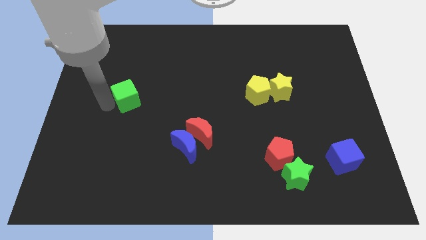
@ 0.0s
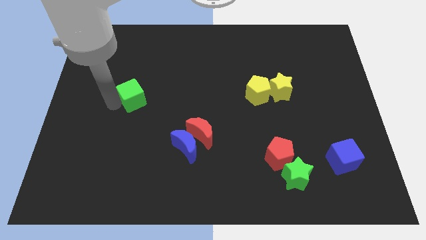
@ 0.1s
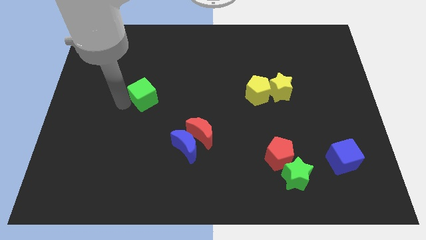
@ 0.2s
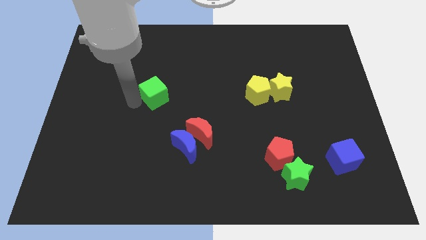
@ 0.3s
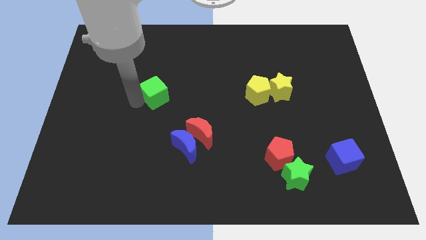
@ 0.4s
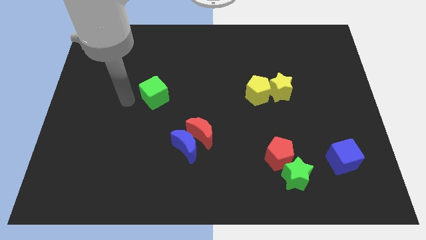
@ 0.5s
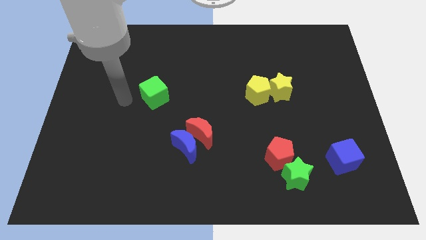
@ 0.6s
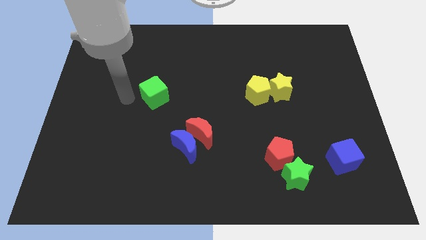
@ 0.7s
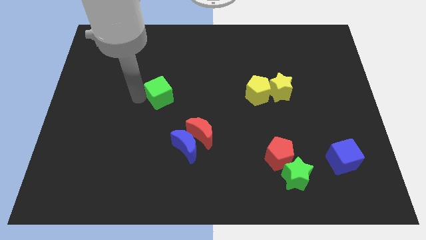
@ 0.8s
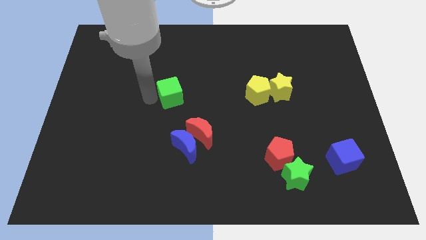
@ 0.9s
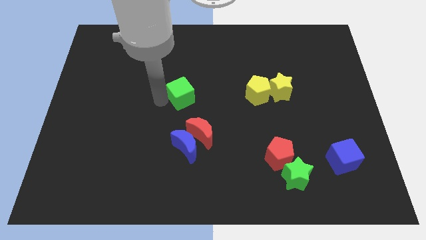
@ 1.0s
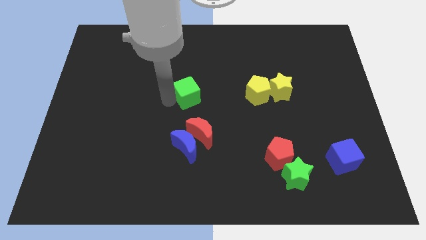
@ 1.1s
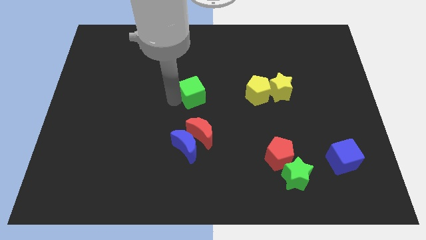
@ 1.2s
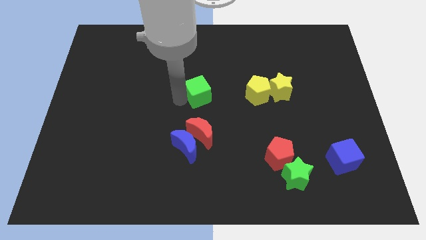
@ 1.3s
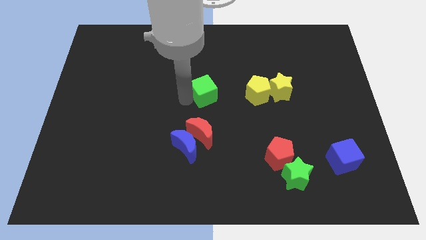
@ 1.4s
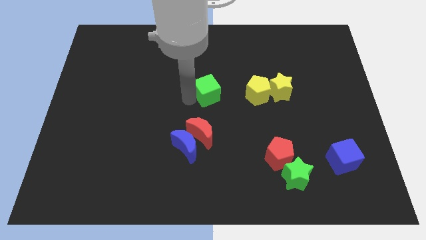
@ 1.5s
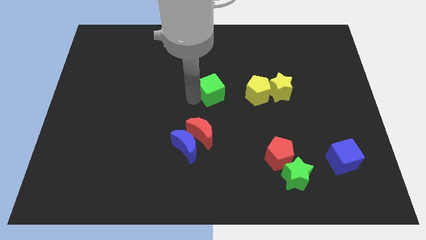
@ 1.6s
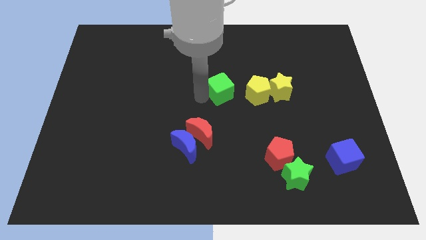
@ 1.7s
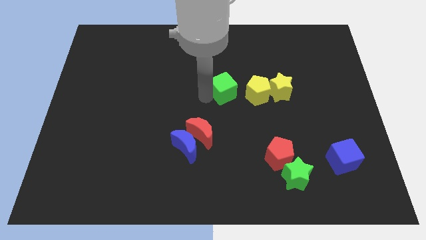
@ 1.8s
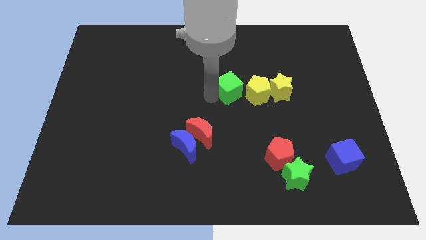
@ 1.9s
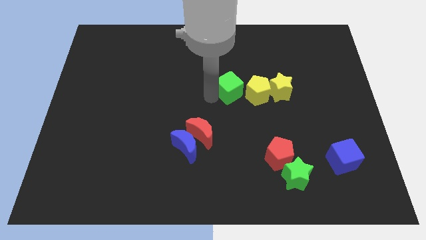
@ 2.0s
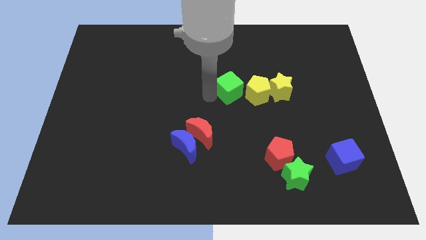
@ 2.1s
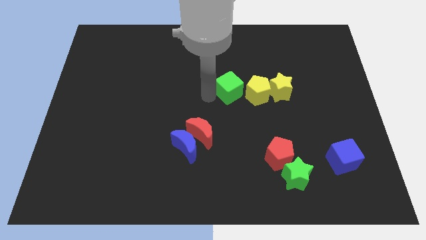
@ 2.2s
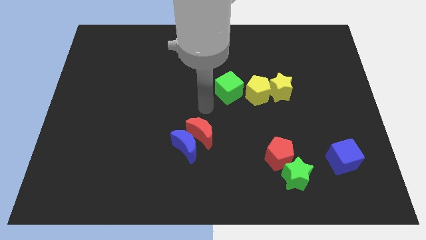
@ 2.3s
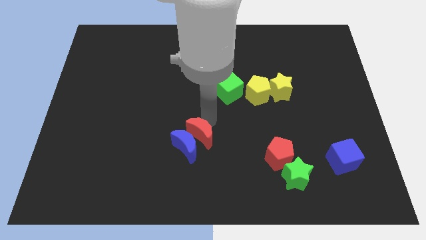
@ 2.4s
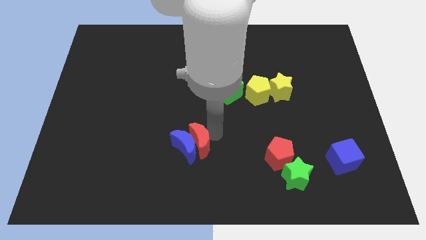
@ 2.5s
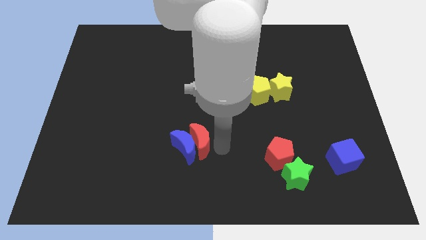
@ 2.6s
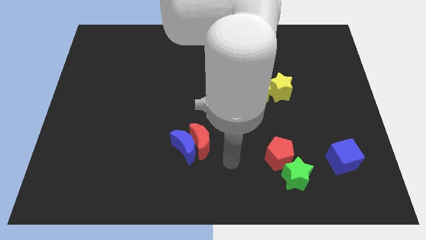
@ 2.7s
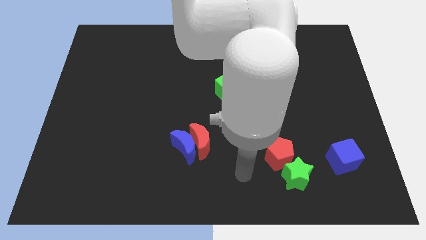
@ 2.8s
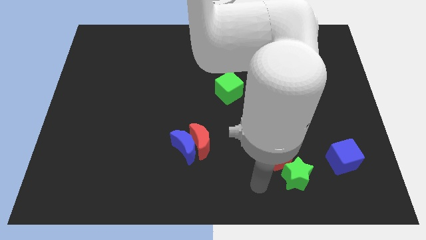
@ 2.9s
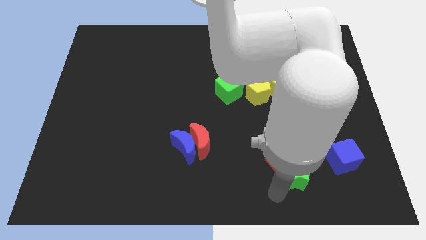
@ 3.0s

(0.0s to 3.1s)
move the green cube left to the yellow pentagon

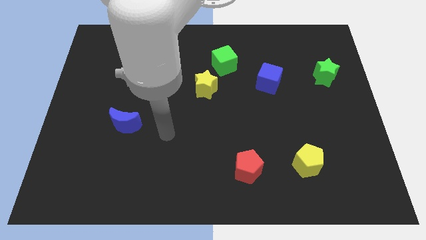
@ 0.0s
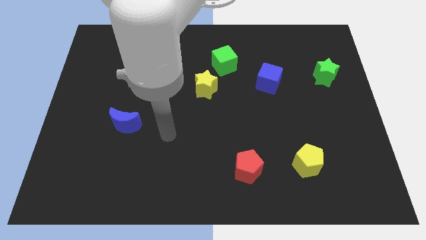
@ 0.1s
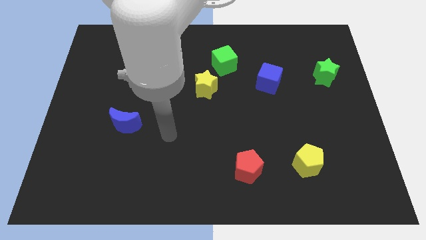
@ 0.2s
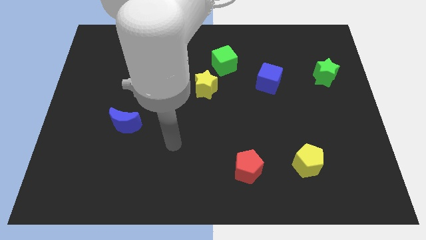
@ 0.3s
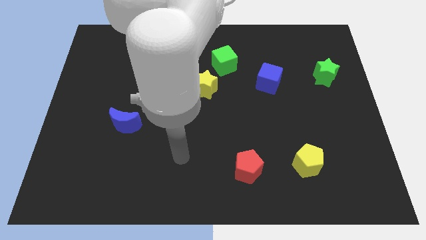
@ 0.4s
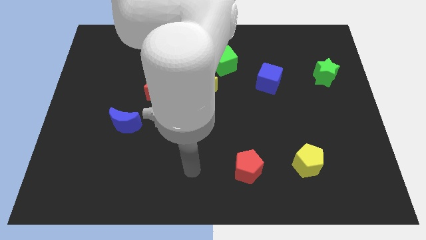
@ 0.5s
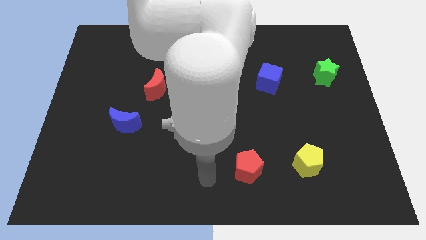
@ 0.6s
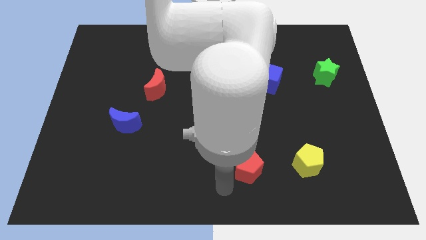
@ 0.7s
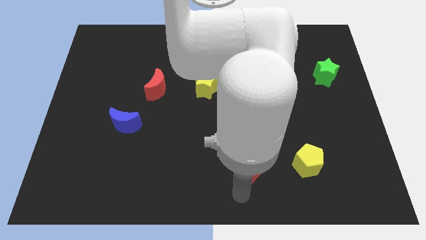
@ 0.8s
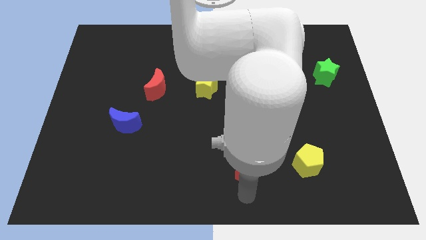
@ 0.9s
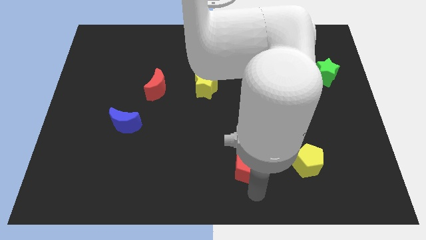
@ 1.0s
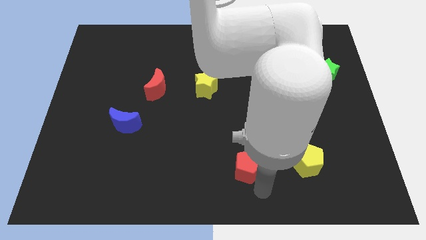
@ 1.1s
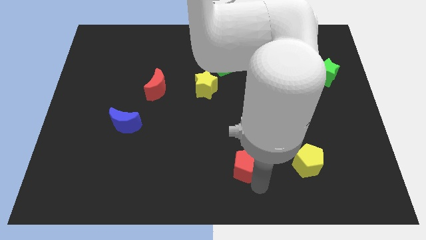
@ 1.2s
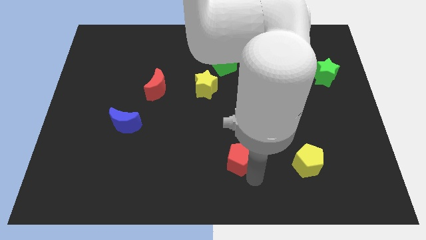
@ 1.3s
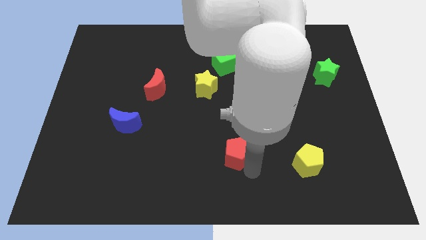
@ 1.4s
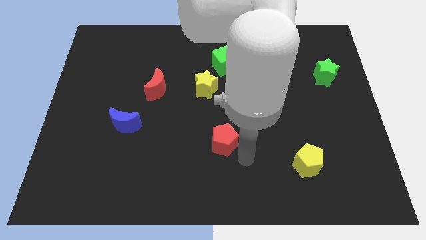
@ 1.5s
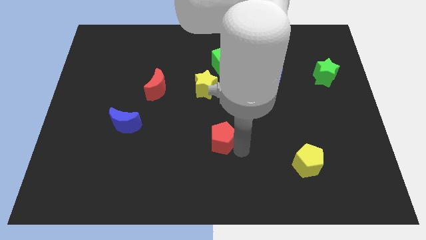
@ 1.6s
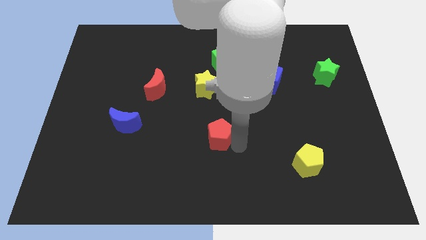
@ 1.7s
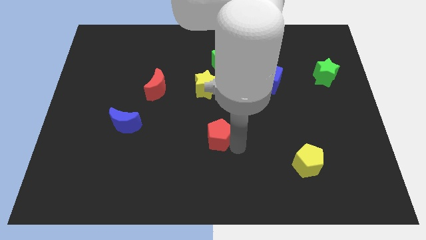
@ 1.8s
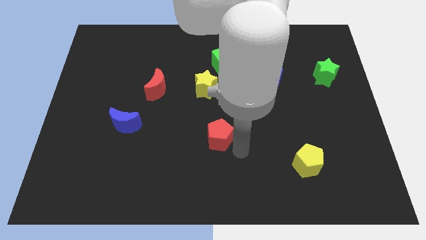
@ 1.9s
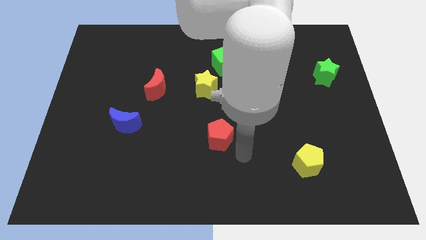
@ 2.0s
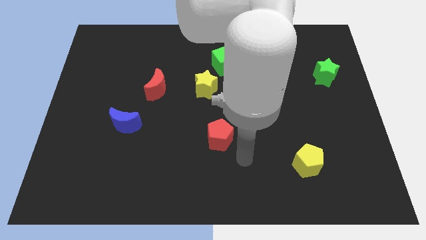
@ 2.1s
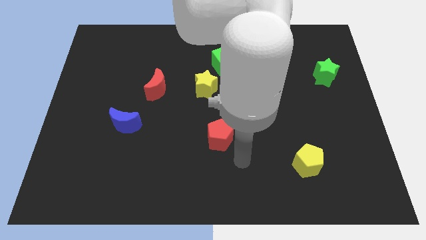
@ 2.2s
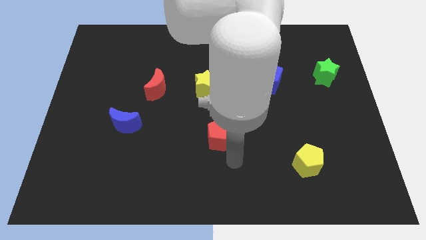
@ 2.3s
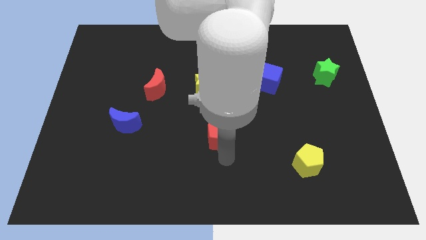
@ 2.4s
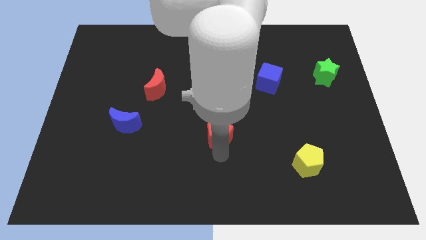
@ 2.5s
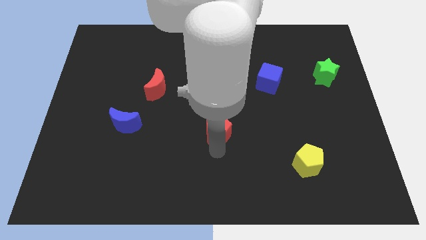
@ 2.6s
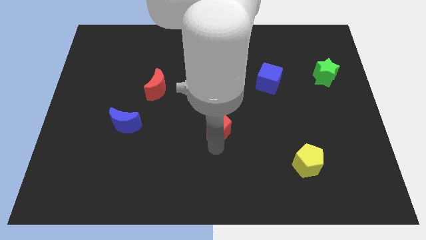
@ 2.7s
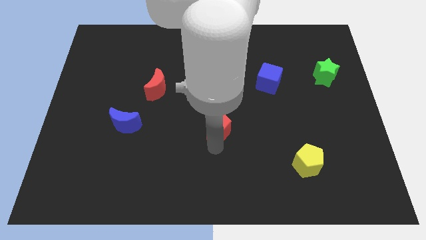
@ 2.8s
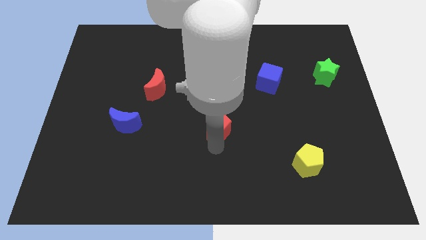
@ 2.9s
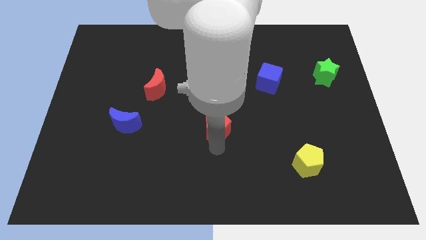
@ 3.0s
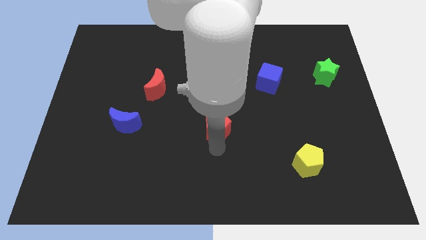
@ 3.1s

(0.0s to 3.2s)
move red pentagon towards yellow star

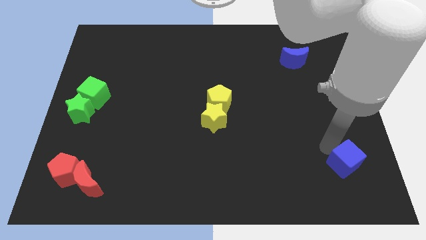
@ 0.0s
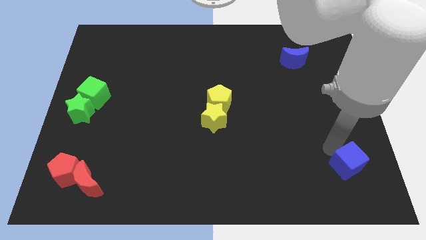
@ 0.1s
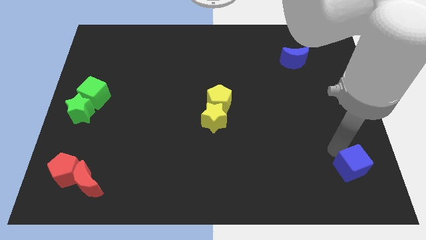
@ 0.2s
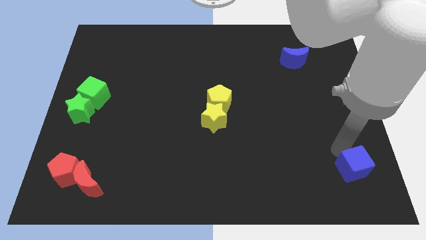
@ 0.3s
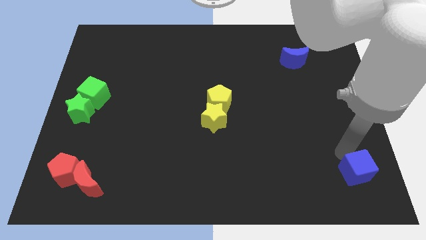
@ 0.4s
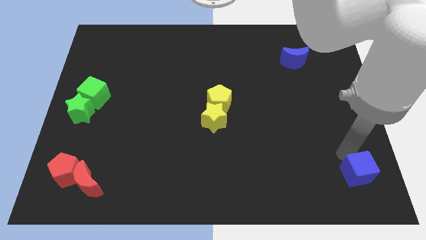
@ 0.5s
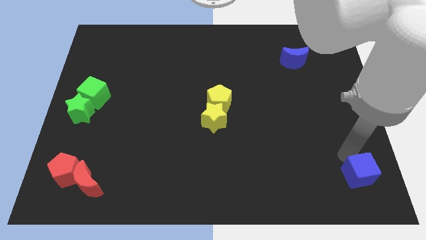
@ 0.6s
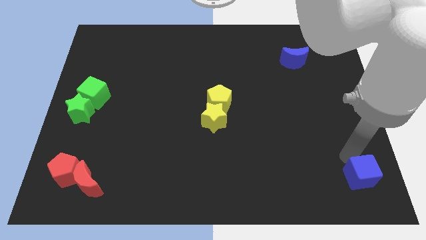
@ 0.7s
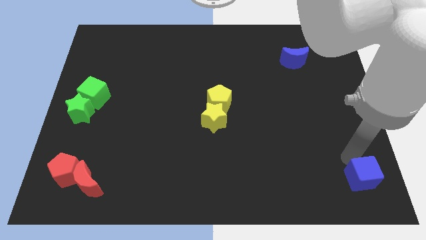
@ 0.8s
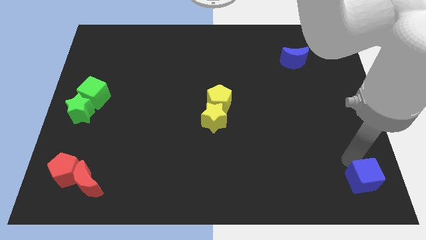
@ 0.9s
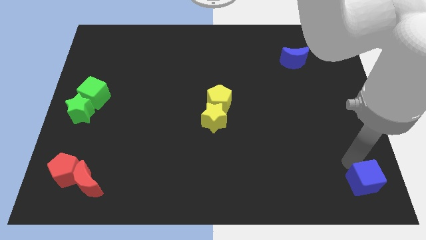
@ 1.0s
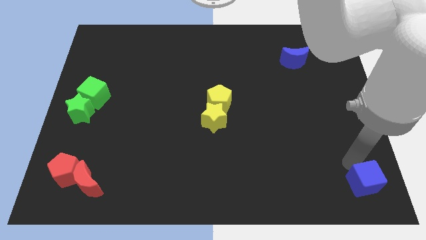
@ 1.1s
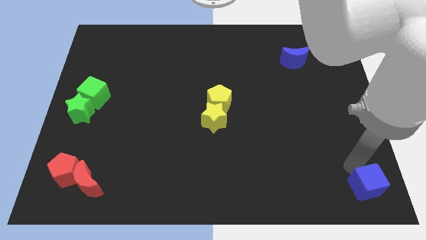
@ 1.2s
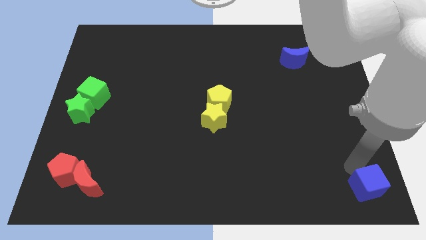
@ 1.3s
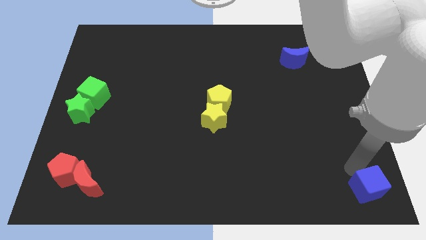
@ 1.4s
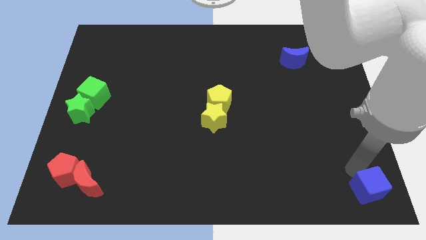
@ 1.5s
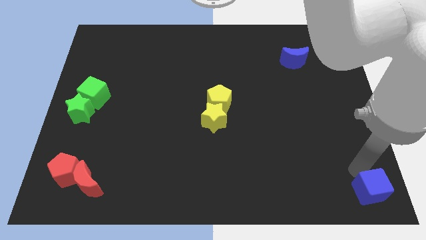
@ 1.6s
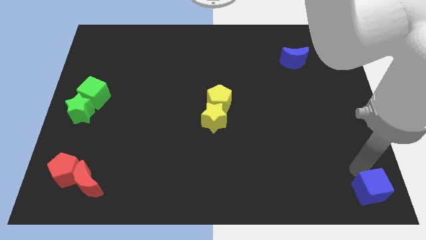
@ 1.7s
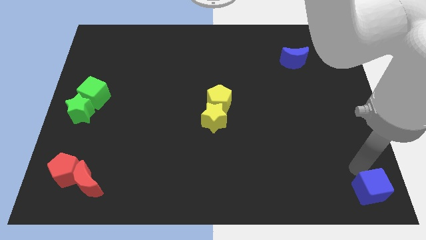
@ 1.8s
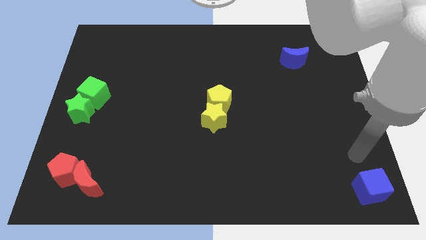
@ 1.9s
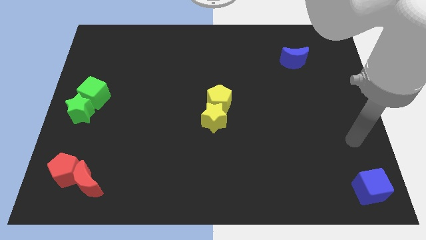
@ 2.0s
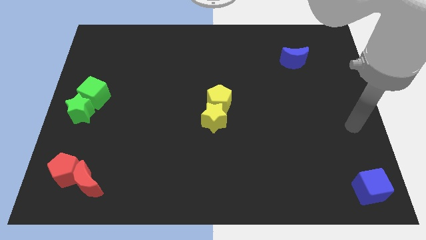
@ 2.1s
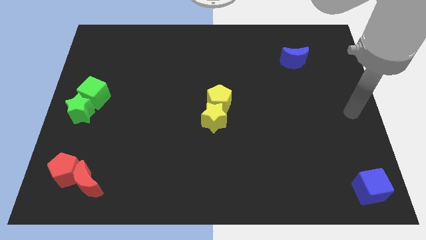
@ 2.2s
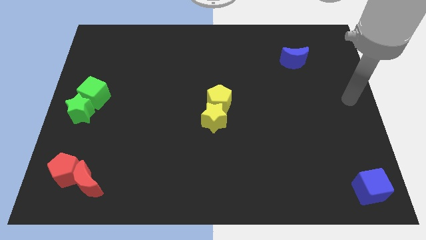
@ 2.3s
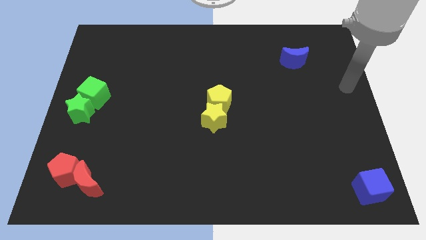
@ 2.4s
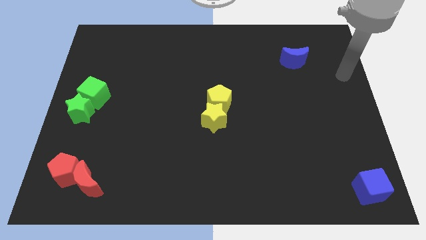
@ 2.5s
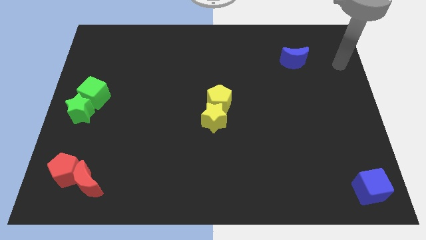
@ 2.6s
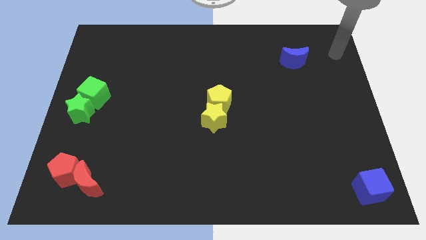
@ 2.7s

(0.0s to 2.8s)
move the blue cube towards the bottom right
